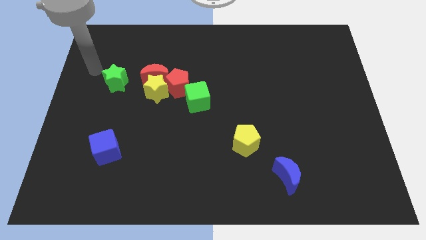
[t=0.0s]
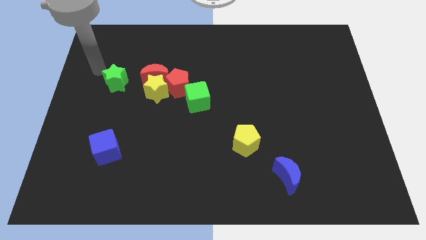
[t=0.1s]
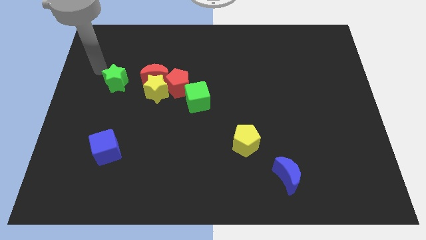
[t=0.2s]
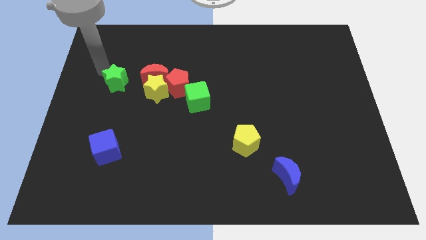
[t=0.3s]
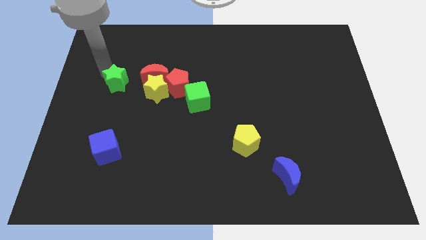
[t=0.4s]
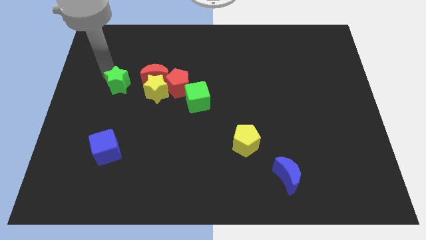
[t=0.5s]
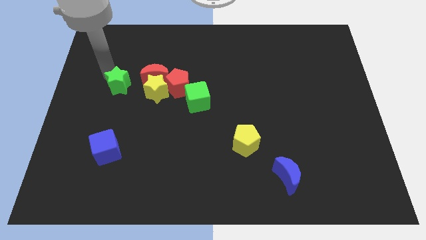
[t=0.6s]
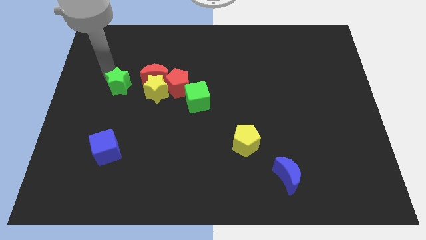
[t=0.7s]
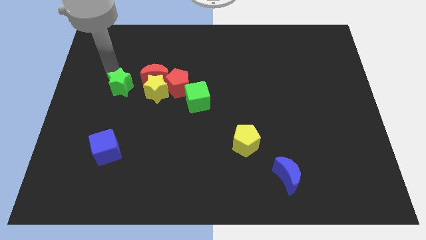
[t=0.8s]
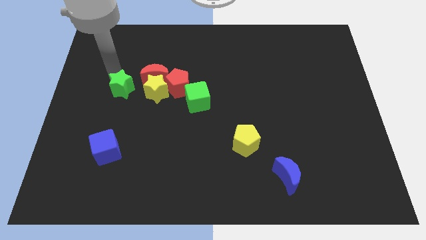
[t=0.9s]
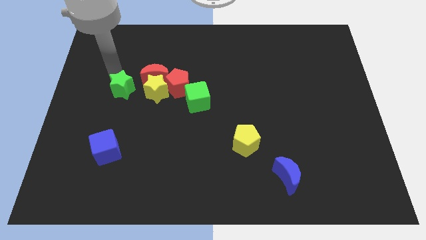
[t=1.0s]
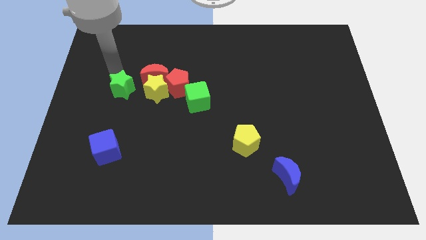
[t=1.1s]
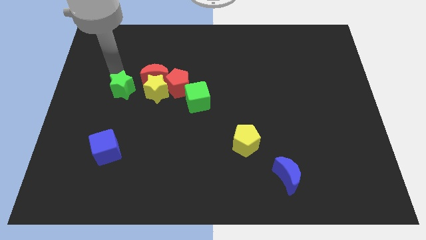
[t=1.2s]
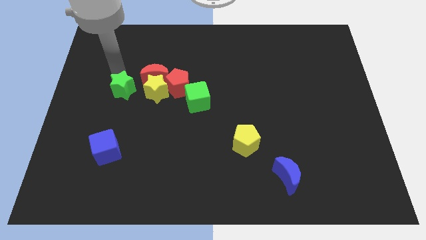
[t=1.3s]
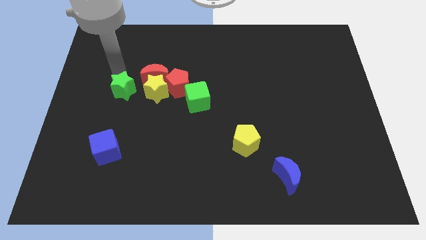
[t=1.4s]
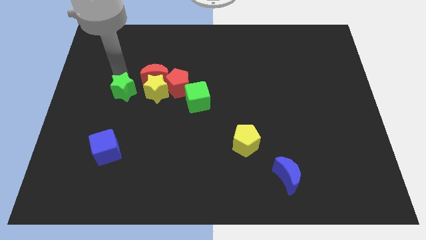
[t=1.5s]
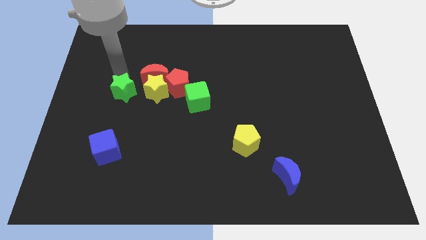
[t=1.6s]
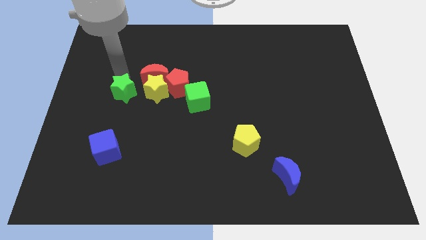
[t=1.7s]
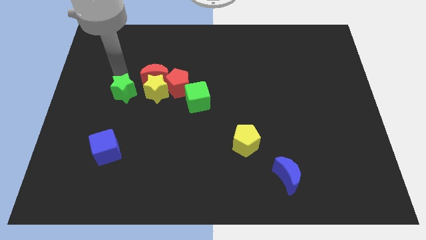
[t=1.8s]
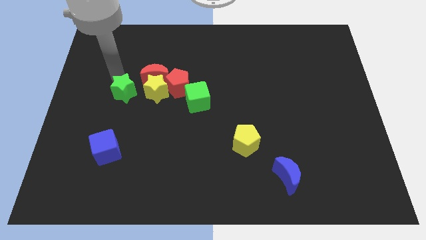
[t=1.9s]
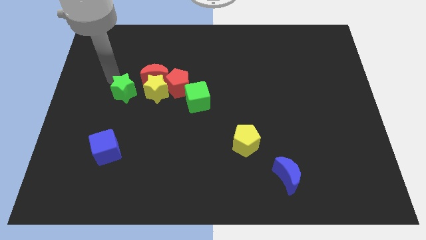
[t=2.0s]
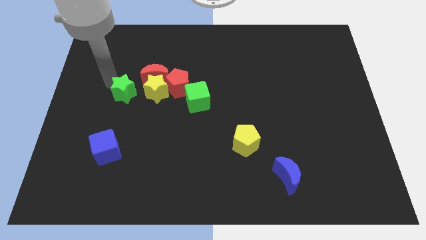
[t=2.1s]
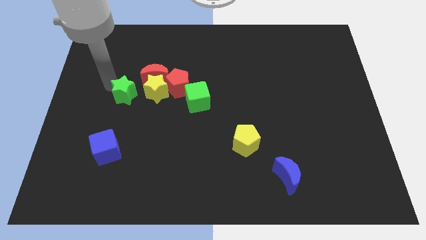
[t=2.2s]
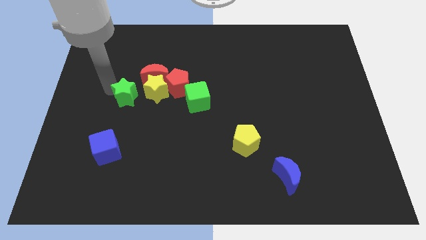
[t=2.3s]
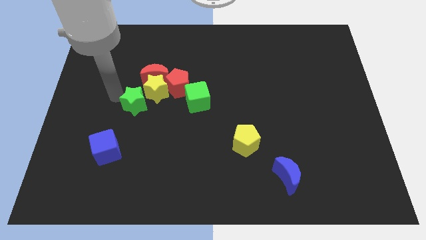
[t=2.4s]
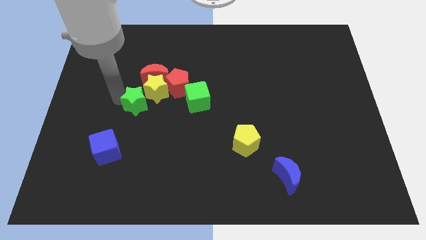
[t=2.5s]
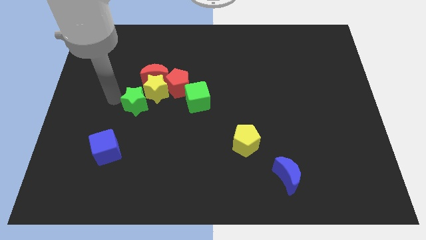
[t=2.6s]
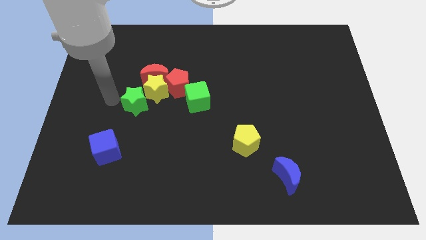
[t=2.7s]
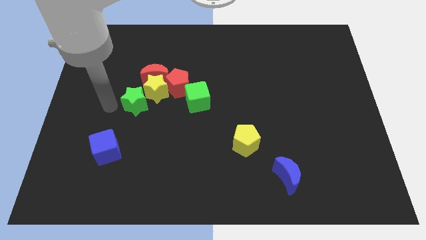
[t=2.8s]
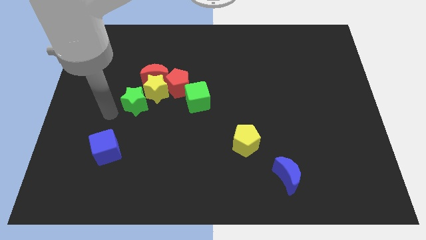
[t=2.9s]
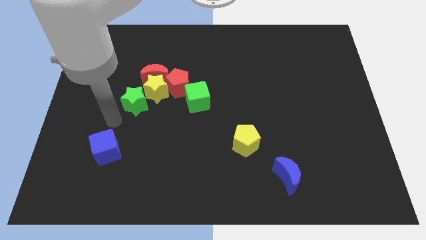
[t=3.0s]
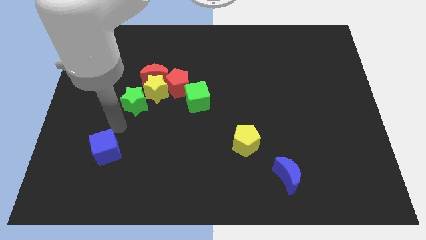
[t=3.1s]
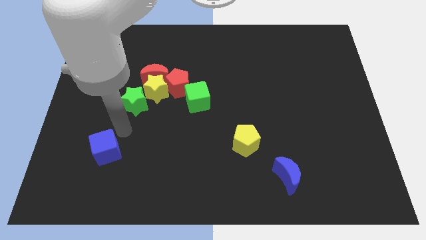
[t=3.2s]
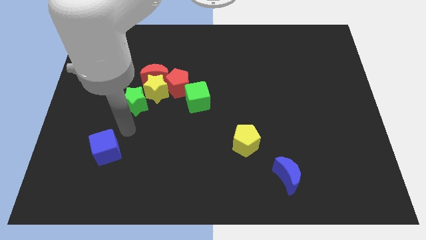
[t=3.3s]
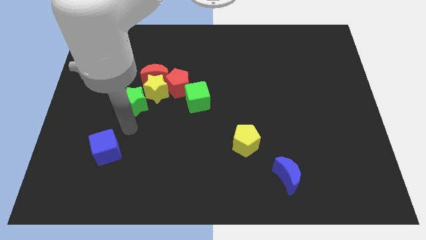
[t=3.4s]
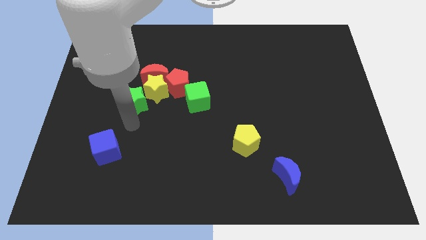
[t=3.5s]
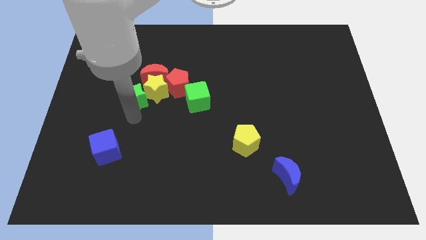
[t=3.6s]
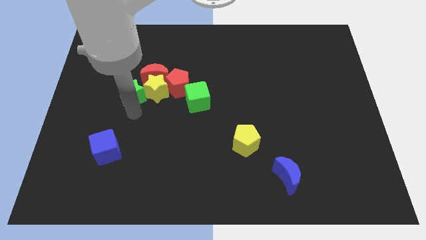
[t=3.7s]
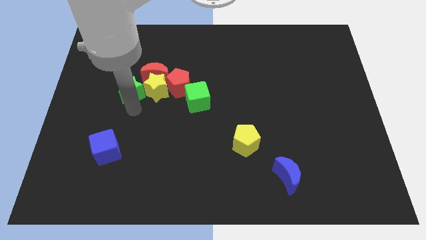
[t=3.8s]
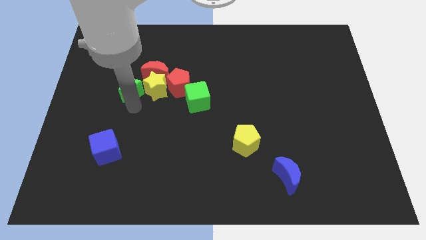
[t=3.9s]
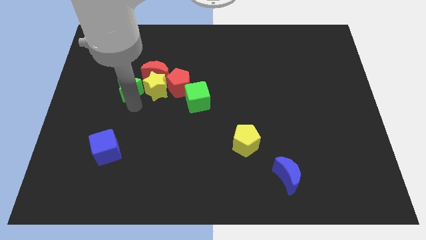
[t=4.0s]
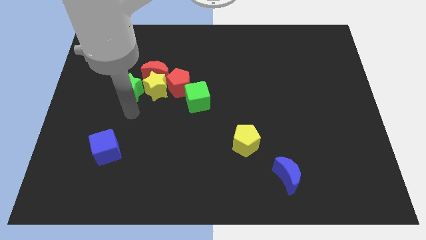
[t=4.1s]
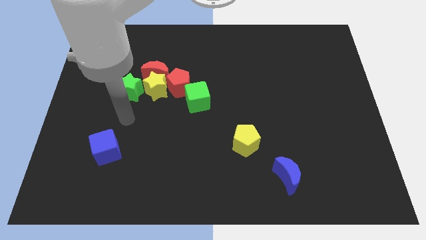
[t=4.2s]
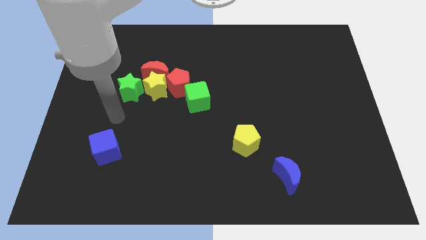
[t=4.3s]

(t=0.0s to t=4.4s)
place the green star left to the yellow star

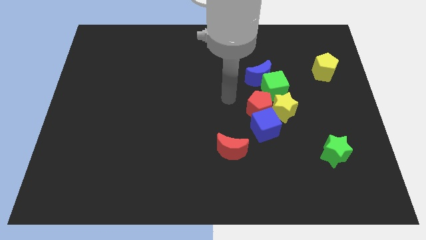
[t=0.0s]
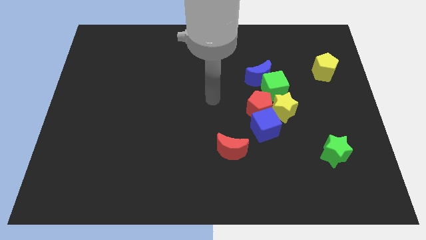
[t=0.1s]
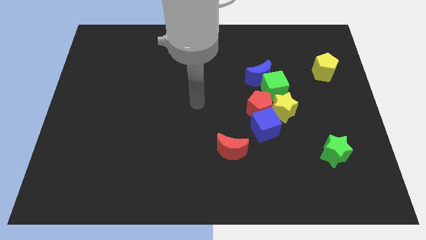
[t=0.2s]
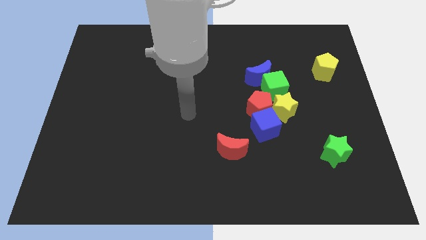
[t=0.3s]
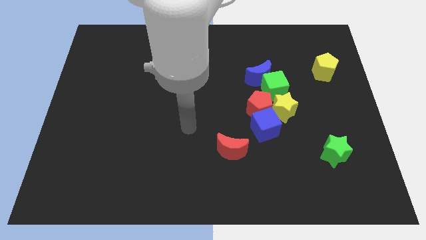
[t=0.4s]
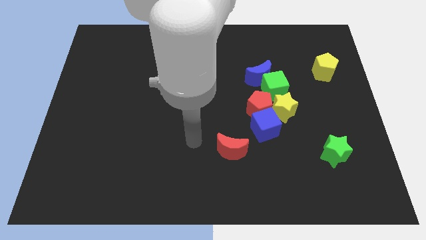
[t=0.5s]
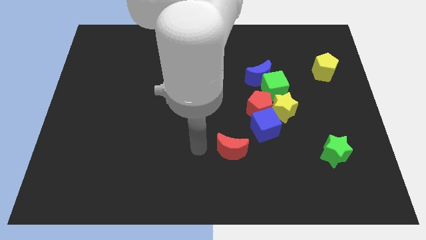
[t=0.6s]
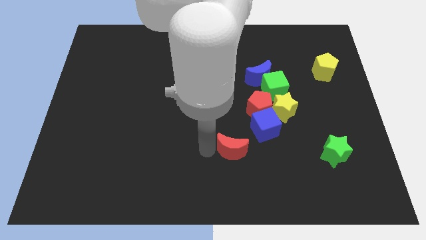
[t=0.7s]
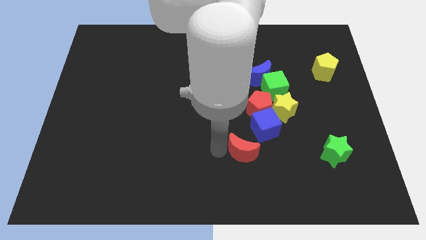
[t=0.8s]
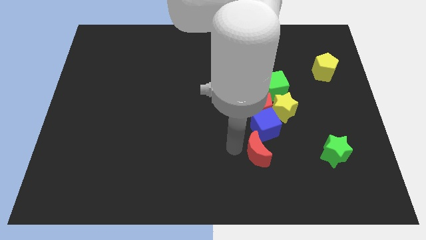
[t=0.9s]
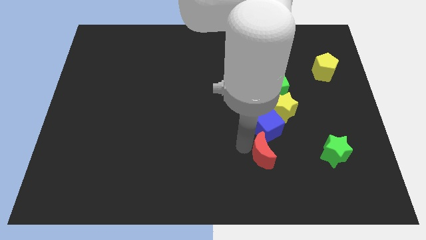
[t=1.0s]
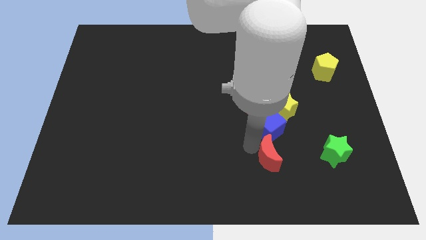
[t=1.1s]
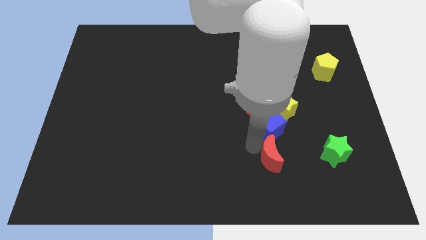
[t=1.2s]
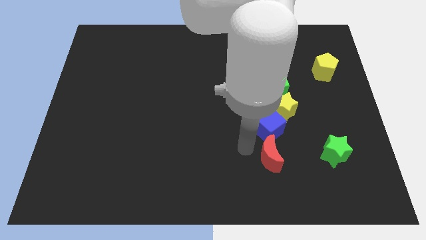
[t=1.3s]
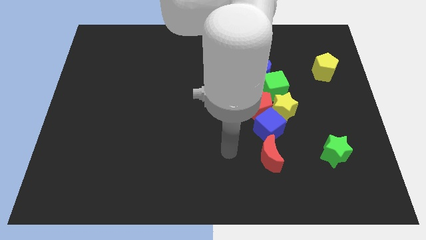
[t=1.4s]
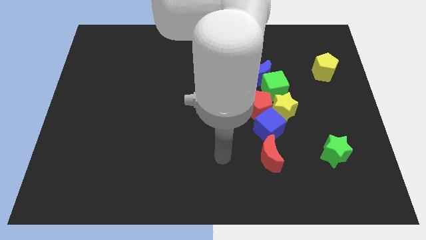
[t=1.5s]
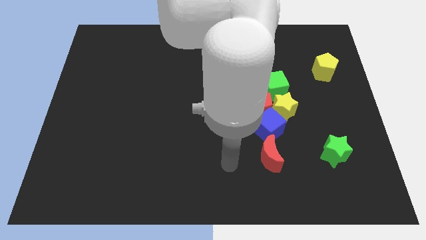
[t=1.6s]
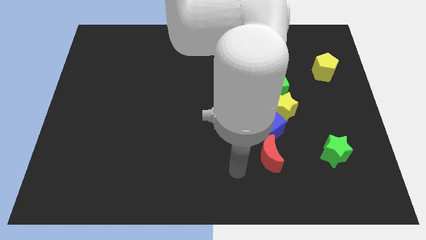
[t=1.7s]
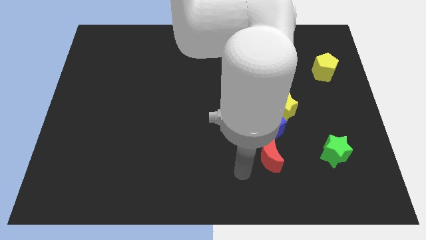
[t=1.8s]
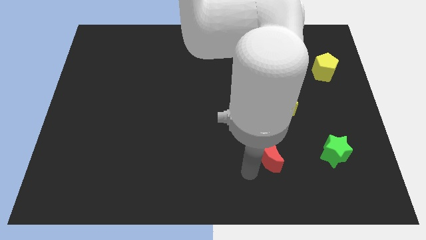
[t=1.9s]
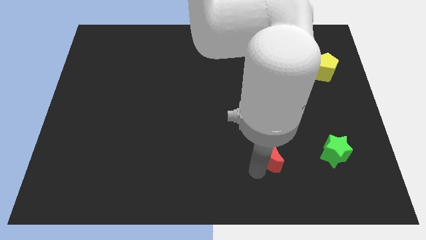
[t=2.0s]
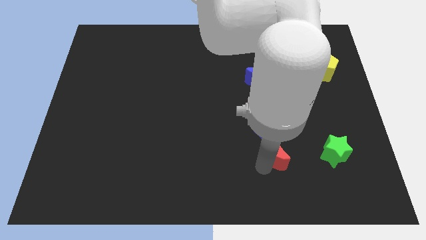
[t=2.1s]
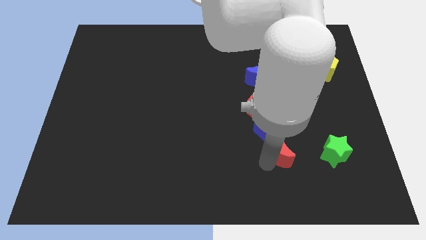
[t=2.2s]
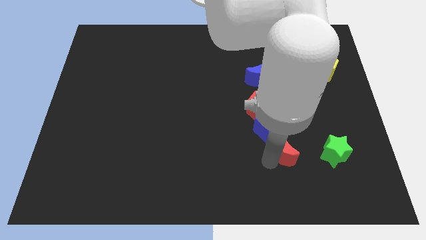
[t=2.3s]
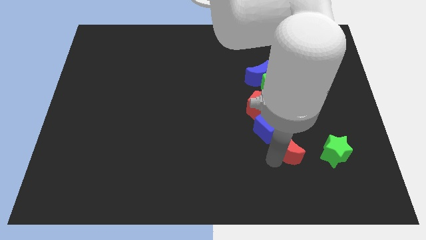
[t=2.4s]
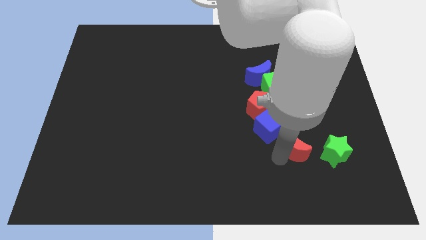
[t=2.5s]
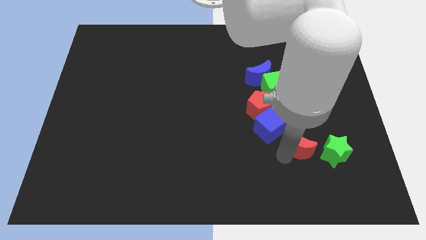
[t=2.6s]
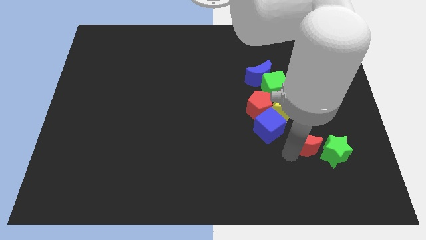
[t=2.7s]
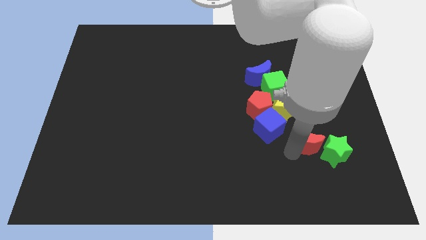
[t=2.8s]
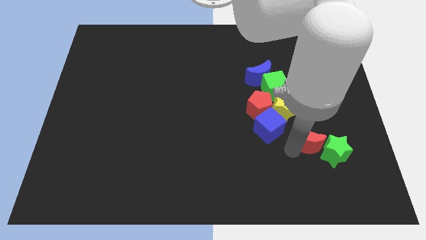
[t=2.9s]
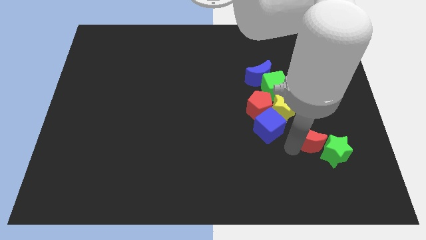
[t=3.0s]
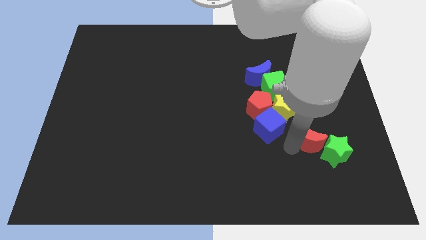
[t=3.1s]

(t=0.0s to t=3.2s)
slide the red moon diagonally bottom right to the blue cube

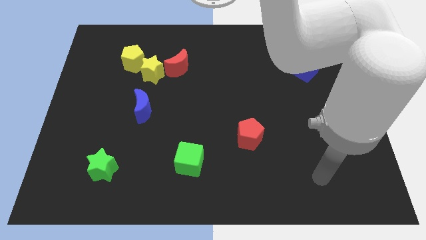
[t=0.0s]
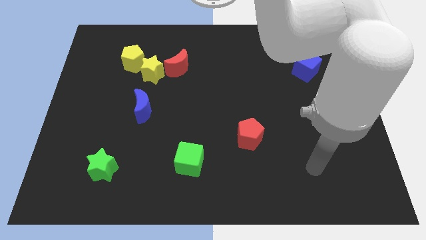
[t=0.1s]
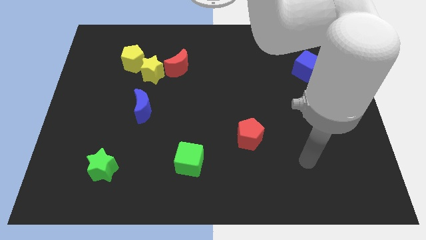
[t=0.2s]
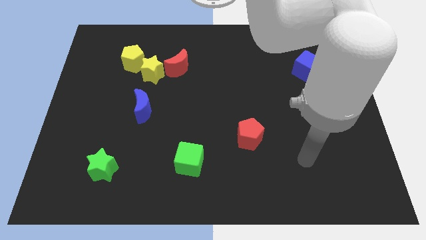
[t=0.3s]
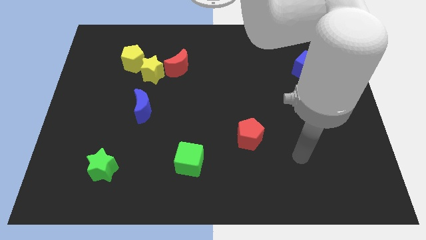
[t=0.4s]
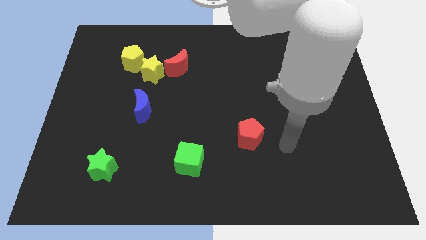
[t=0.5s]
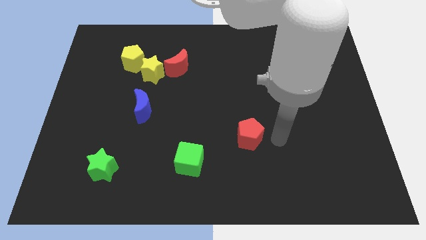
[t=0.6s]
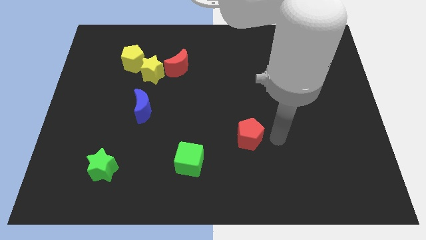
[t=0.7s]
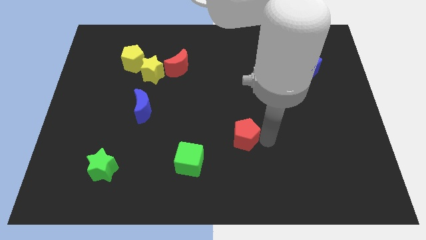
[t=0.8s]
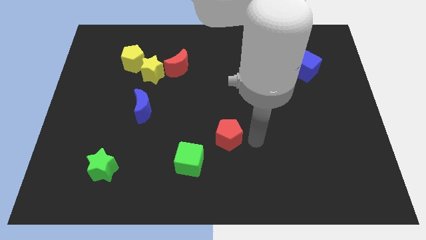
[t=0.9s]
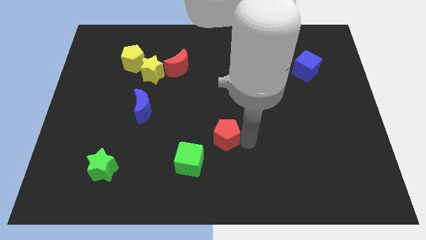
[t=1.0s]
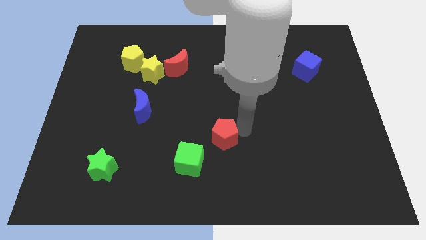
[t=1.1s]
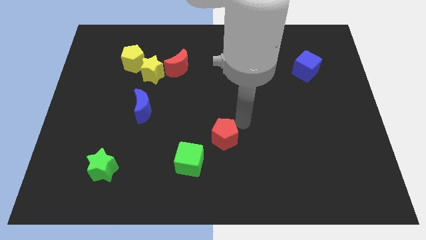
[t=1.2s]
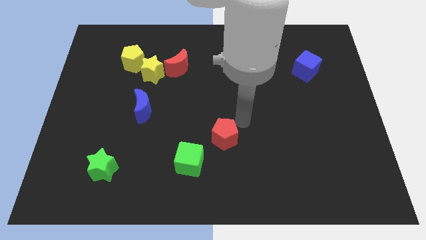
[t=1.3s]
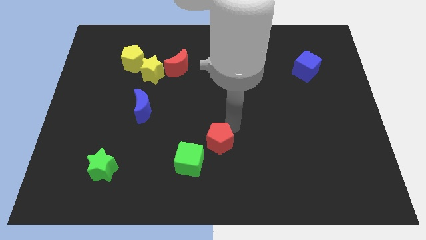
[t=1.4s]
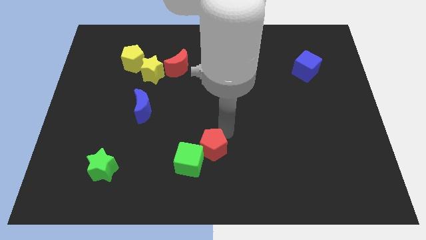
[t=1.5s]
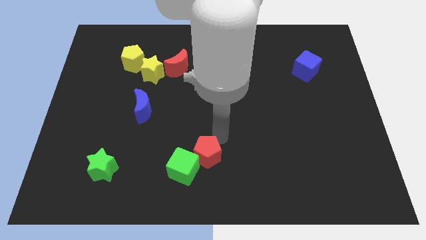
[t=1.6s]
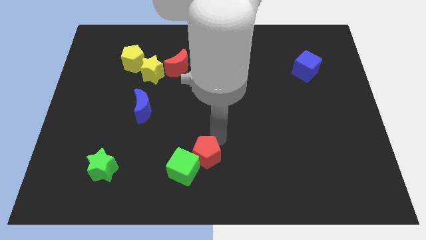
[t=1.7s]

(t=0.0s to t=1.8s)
move the red pentagon into the green cube
